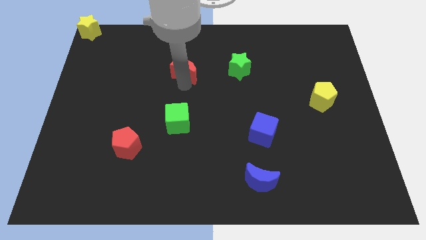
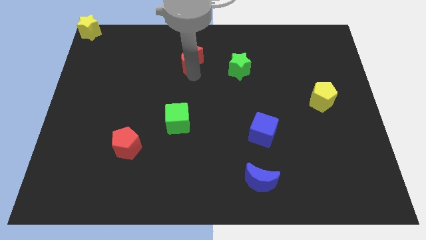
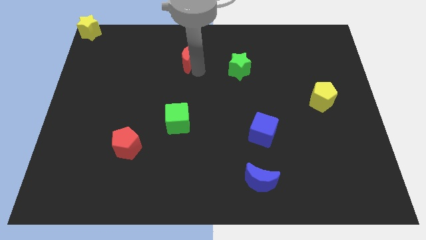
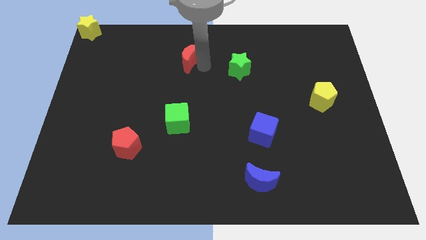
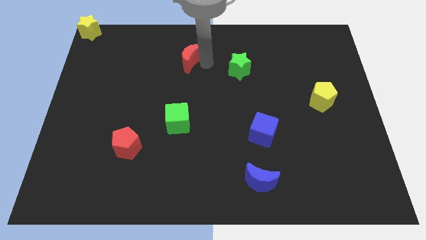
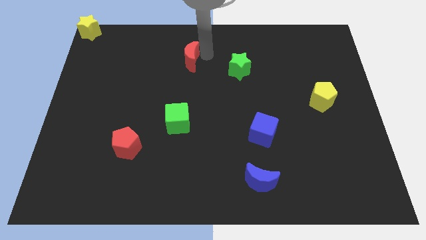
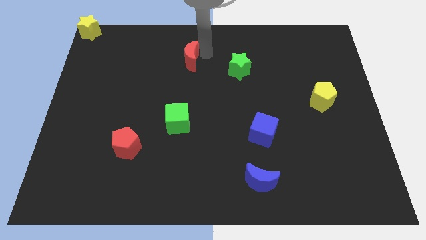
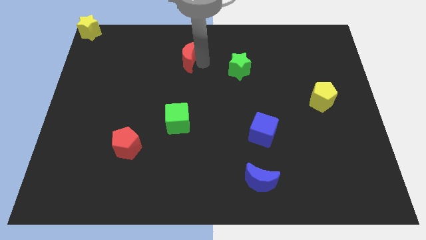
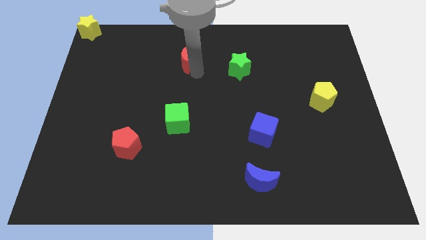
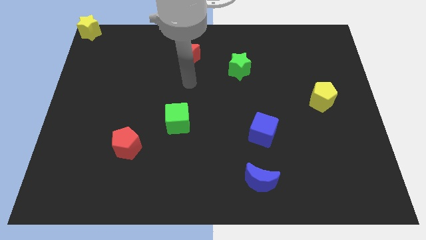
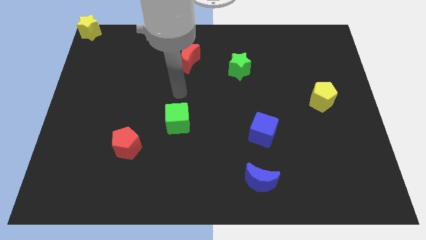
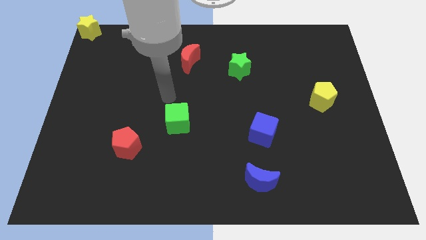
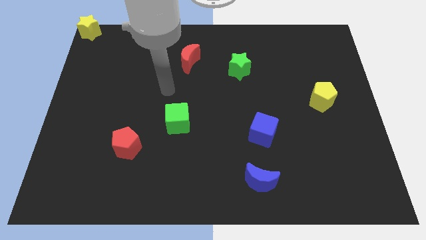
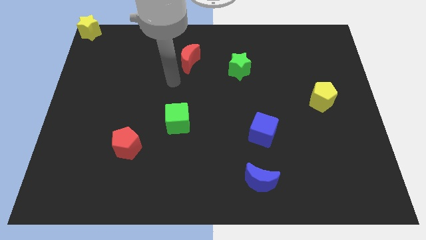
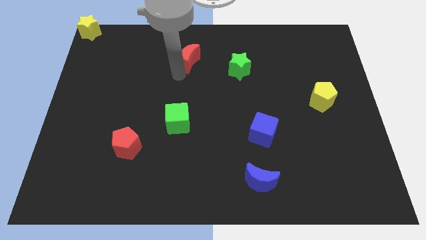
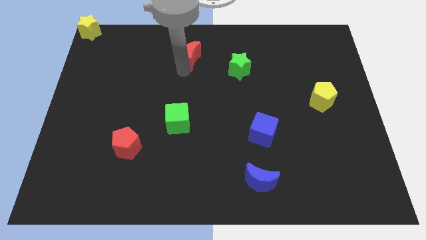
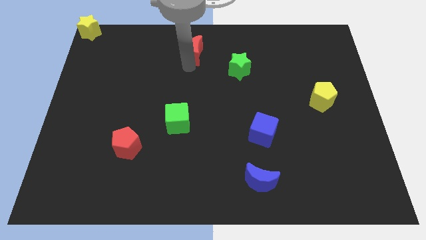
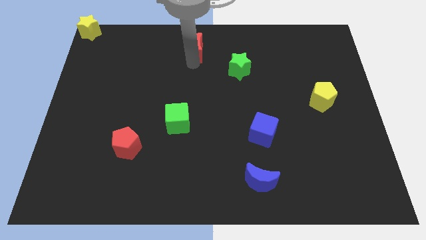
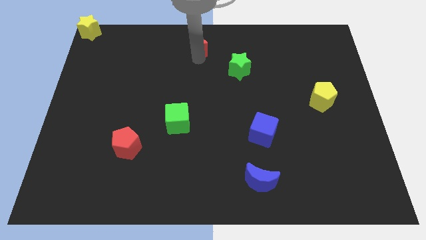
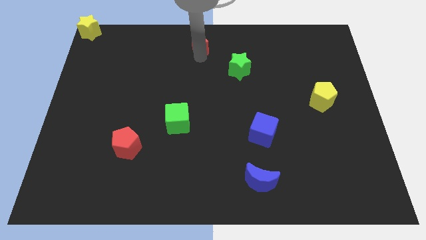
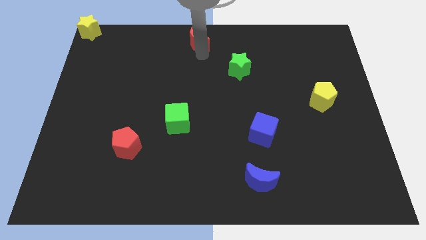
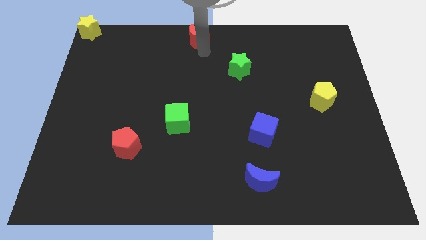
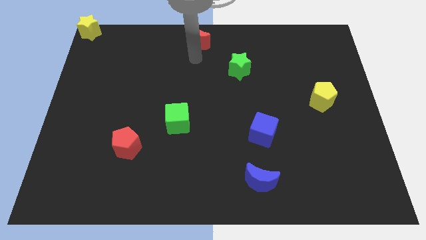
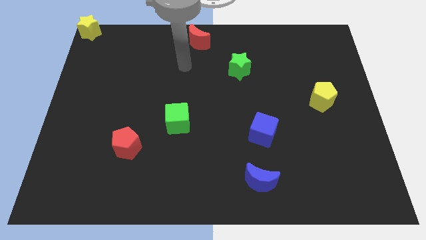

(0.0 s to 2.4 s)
move the red crescent to the top side and diagonal to the green star

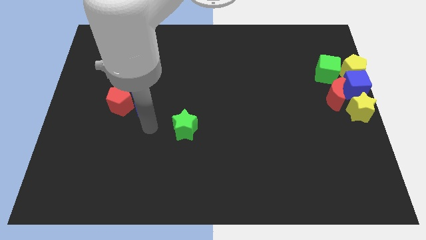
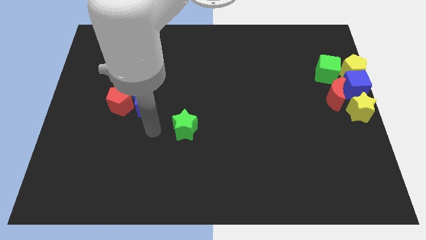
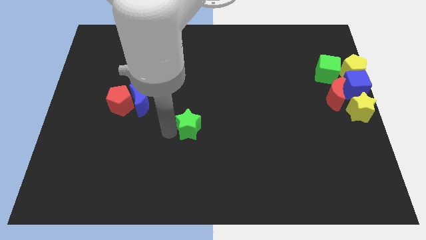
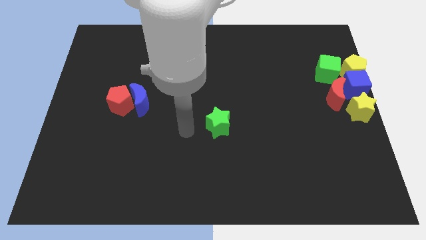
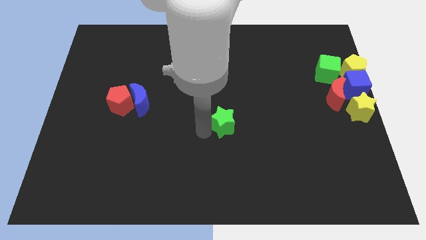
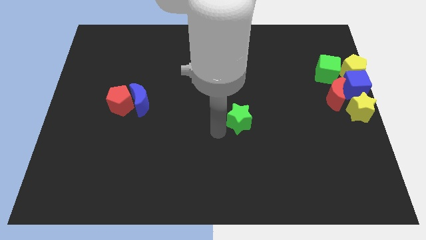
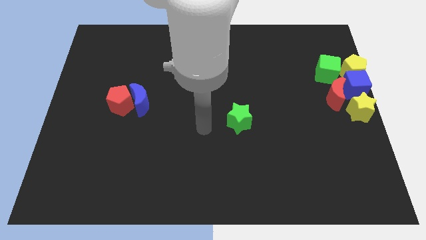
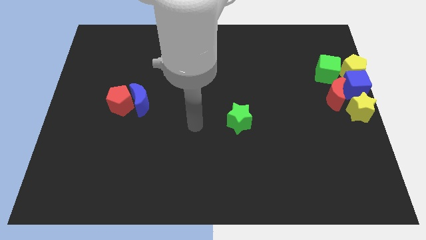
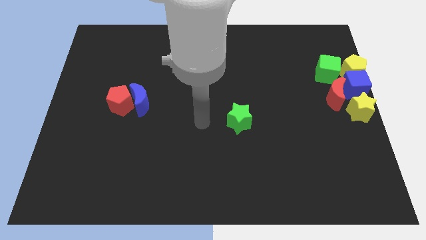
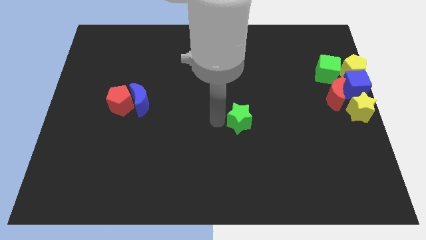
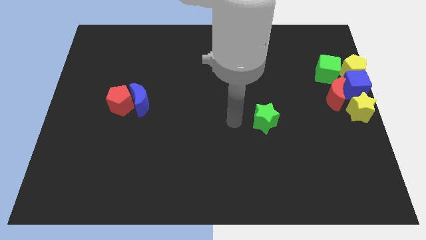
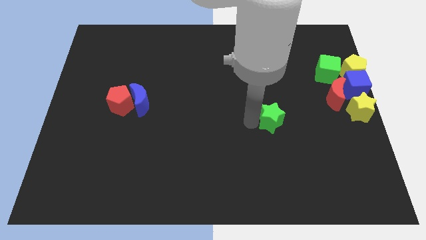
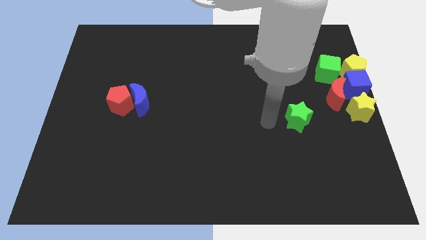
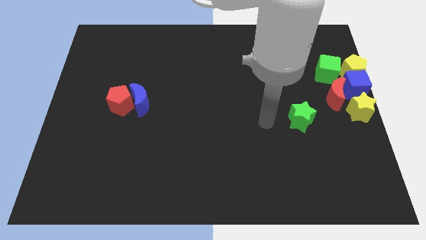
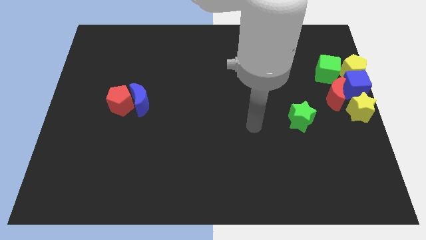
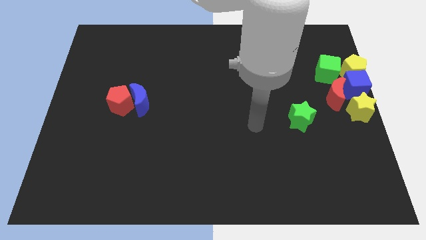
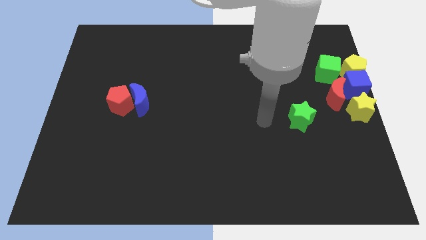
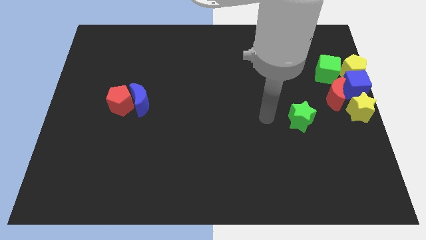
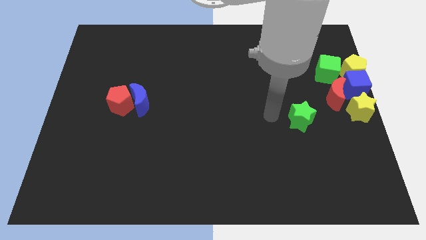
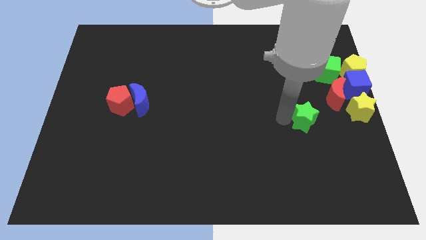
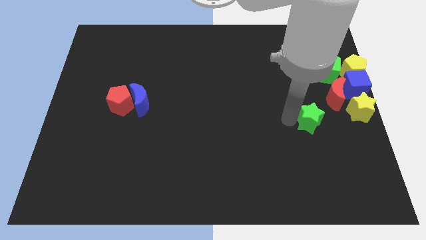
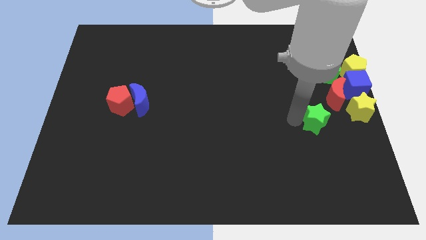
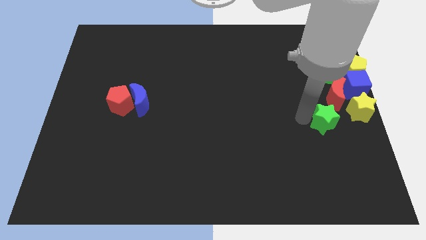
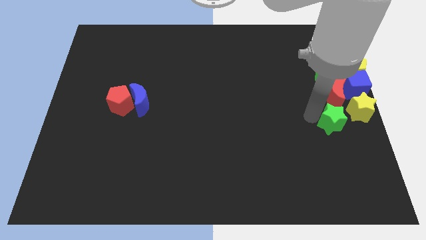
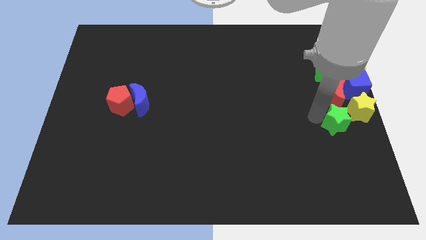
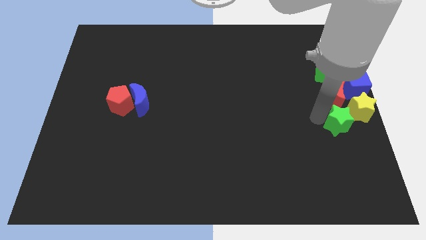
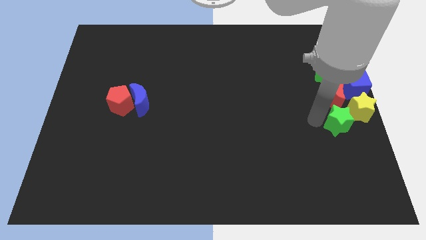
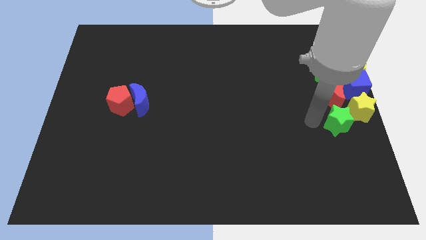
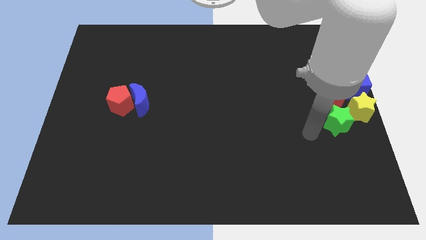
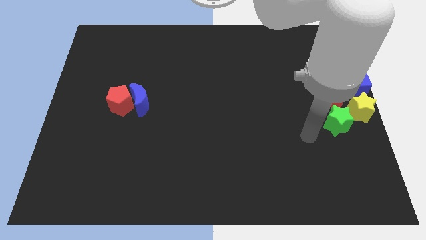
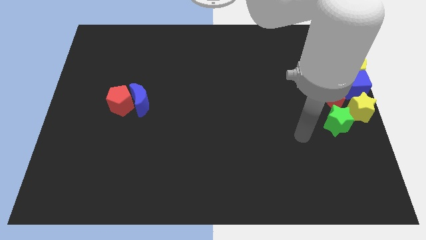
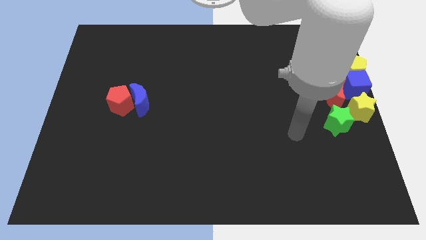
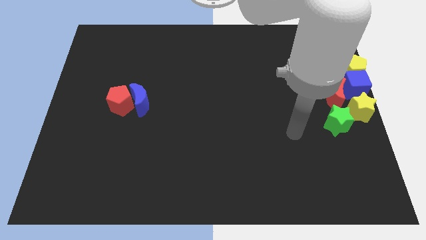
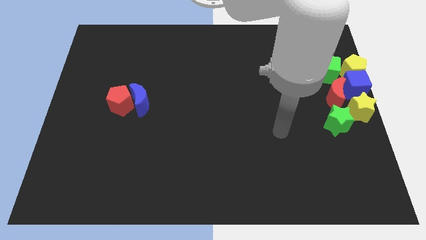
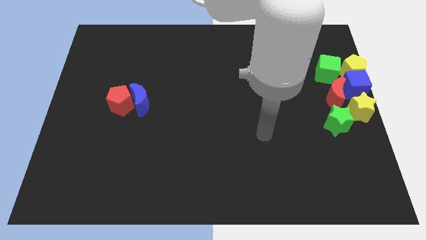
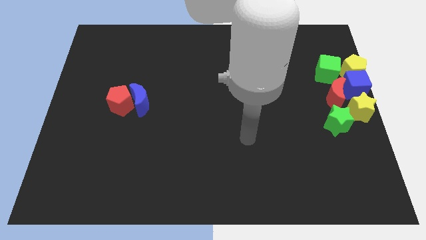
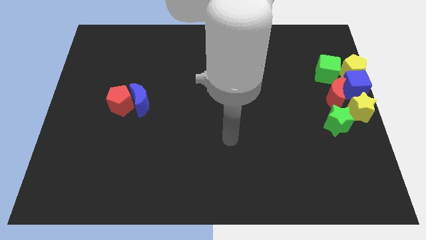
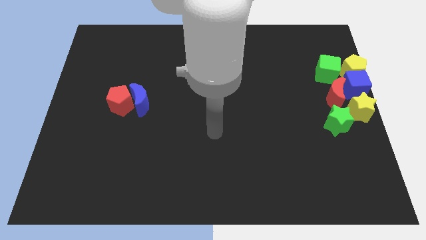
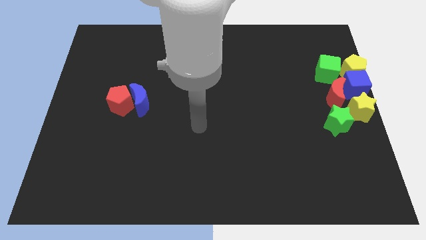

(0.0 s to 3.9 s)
move the green star to the group of blocks

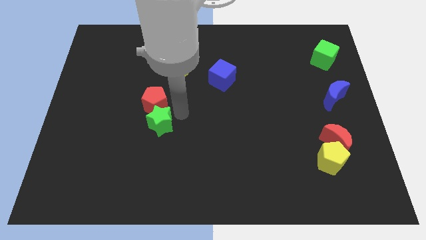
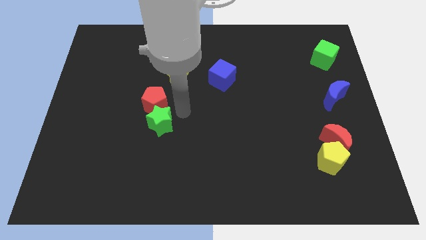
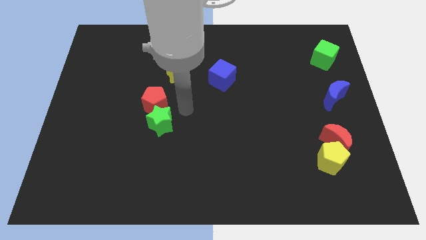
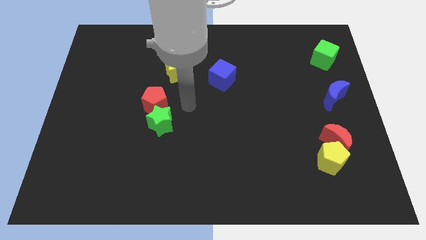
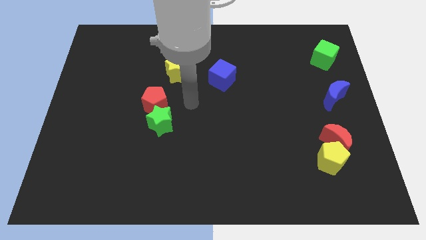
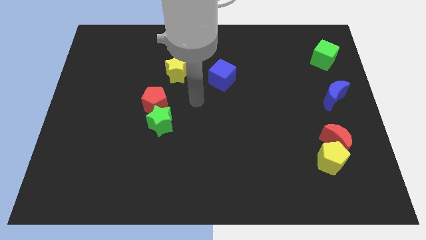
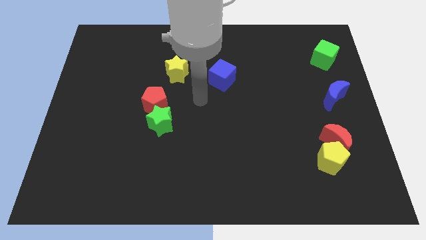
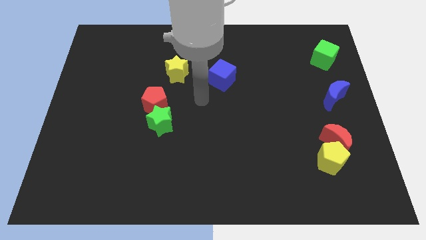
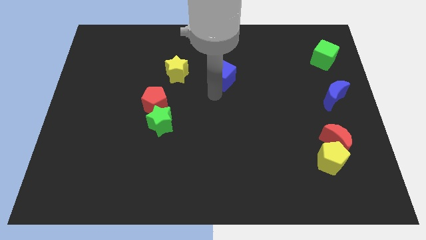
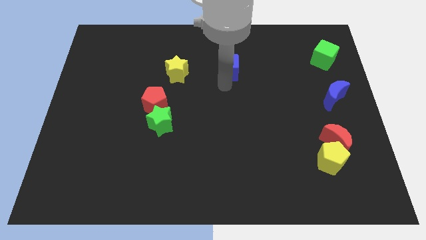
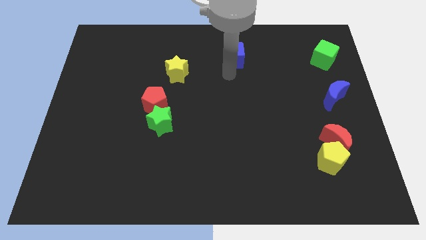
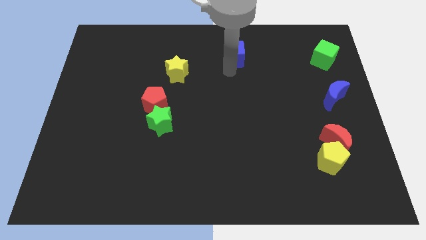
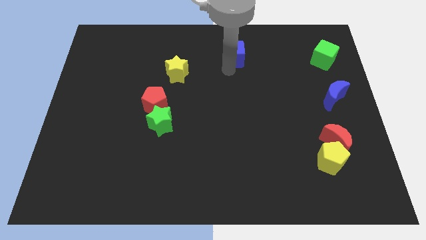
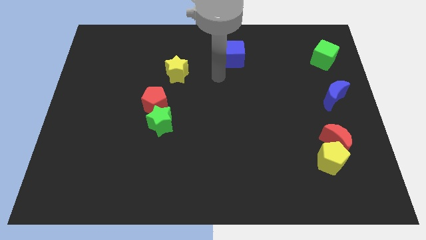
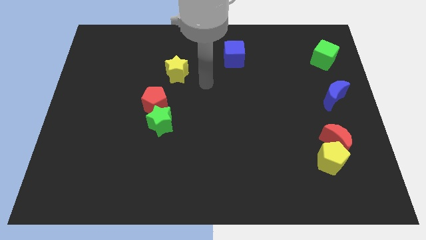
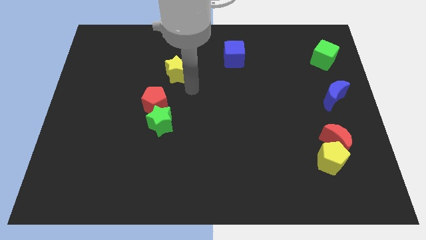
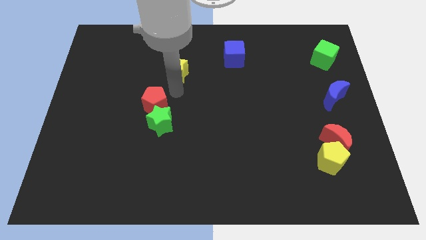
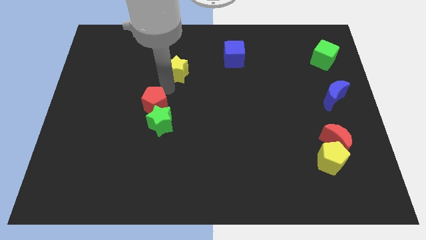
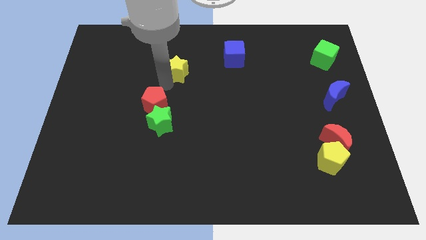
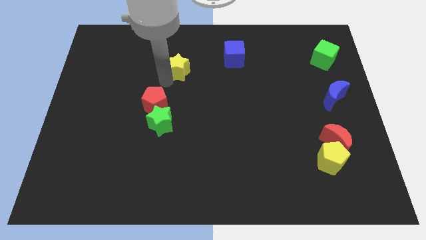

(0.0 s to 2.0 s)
push the blue cube to the left of green cube

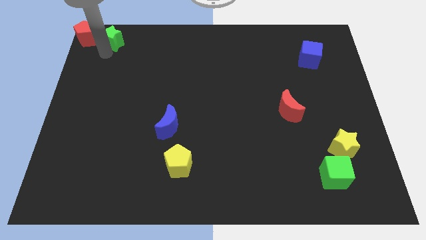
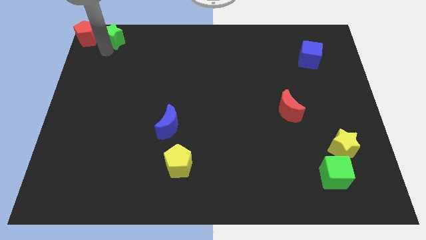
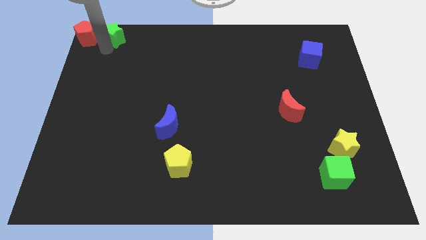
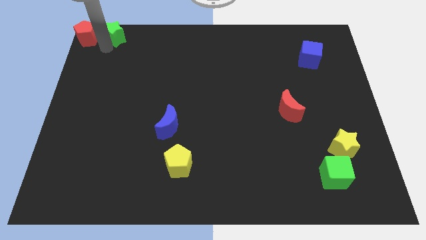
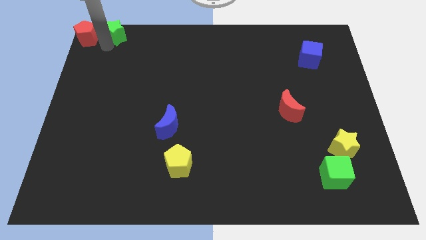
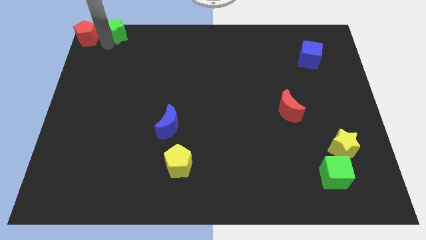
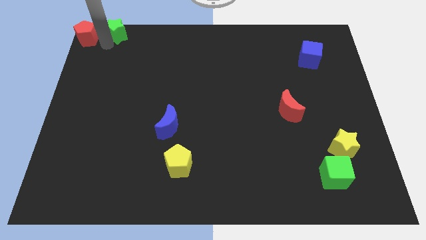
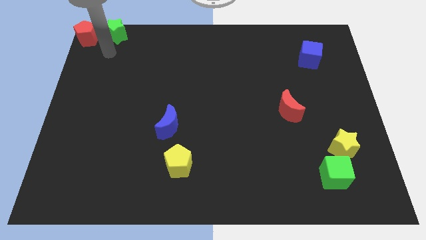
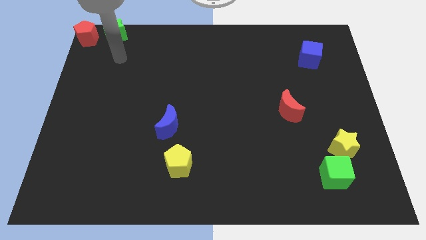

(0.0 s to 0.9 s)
put the green star to the right side of red pentagon
